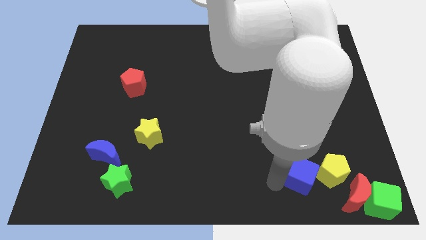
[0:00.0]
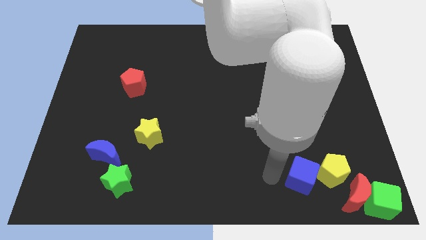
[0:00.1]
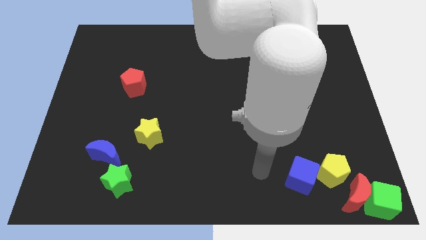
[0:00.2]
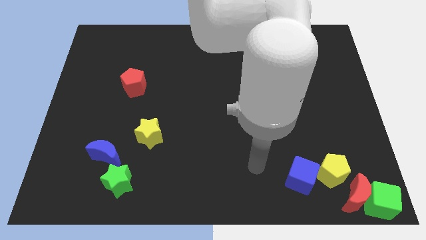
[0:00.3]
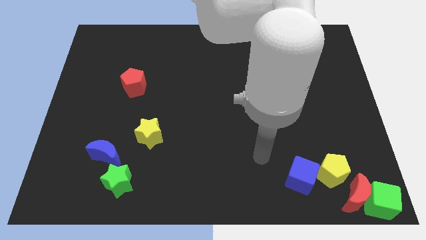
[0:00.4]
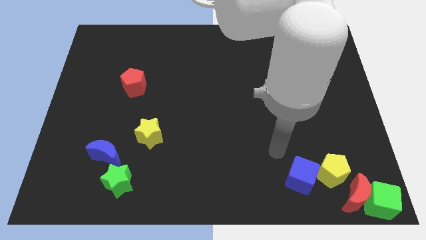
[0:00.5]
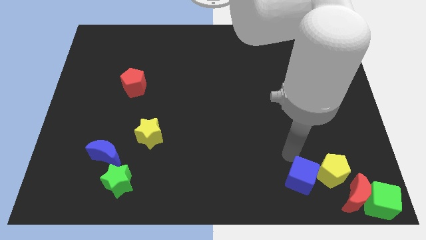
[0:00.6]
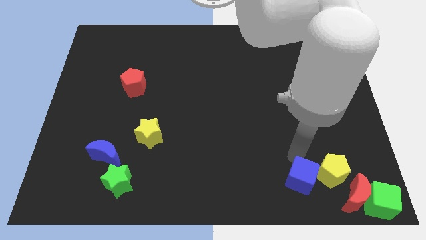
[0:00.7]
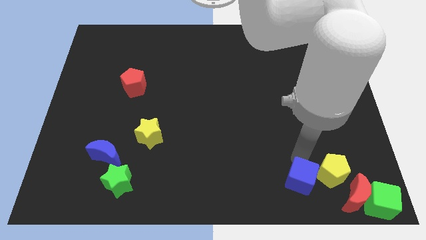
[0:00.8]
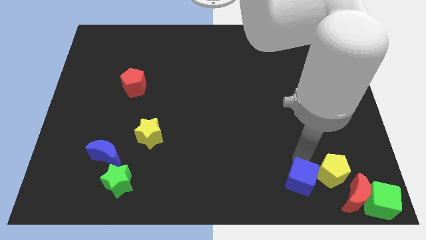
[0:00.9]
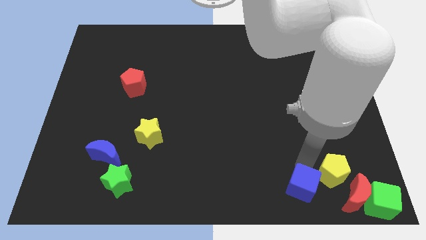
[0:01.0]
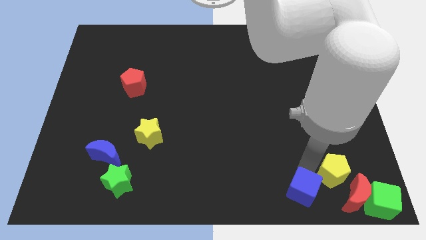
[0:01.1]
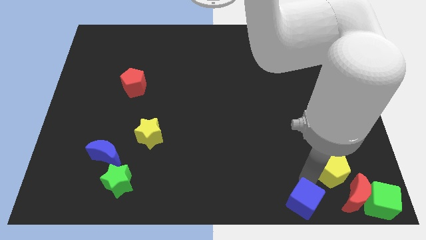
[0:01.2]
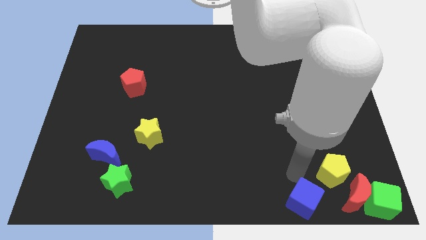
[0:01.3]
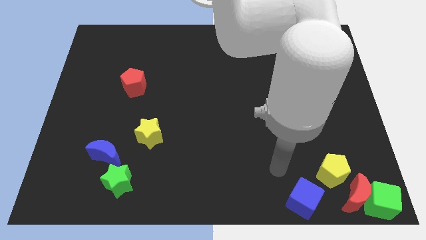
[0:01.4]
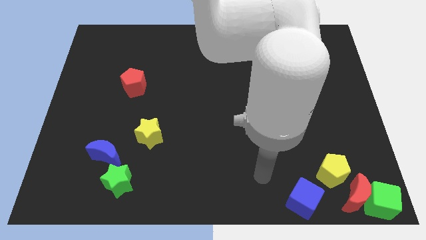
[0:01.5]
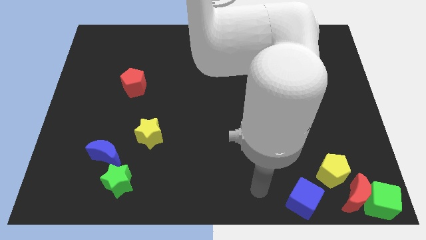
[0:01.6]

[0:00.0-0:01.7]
move the blue cube slightly away from the left side of the yellow pentagon

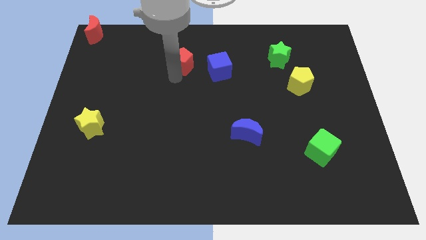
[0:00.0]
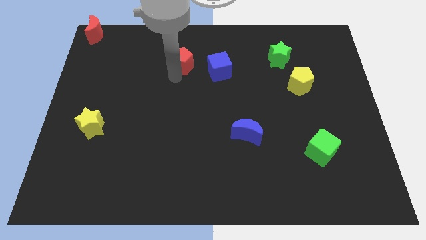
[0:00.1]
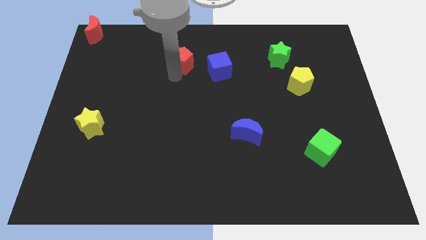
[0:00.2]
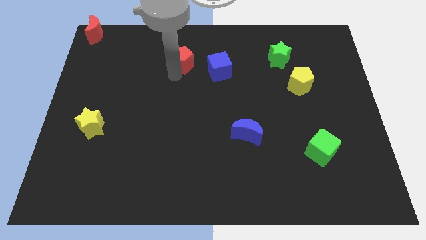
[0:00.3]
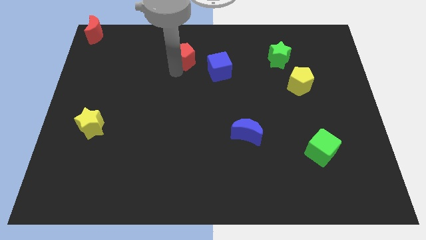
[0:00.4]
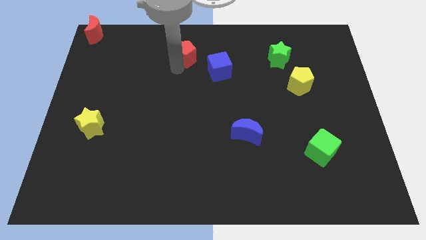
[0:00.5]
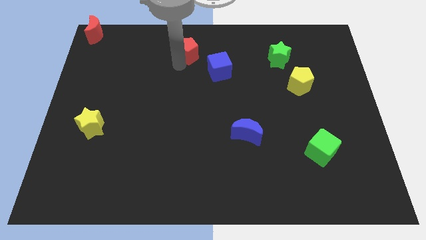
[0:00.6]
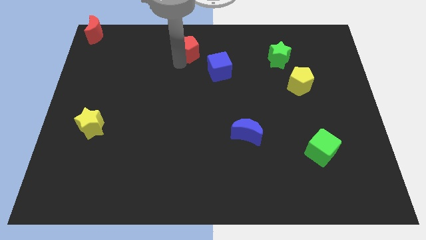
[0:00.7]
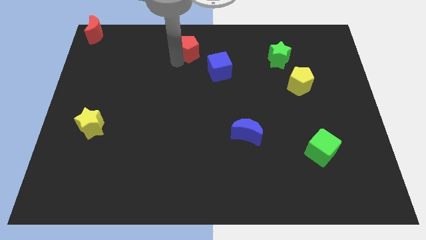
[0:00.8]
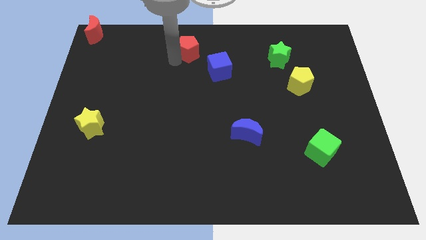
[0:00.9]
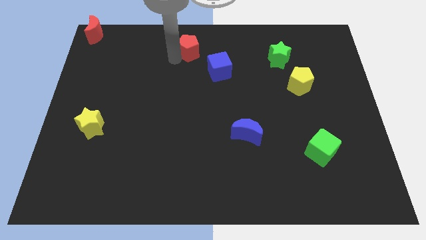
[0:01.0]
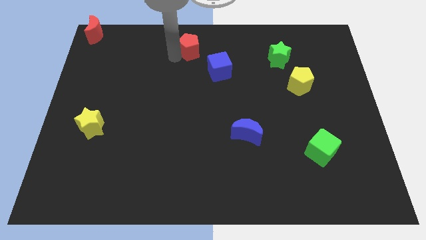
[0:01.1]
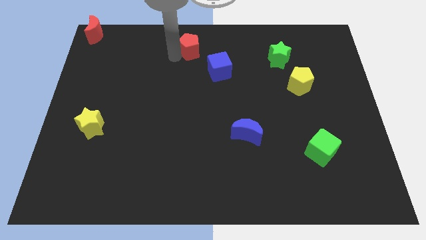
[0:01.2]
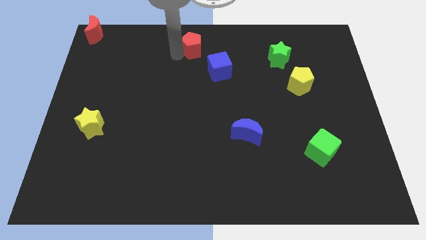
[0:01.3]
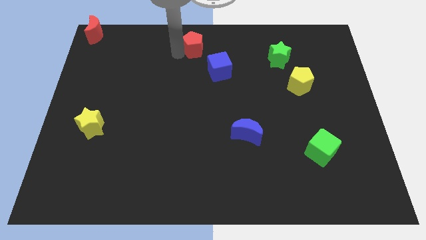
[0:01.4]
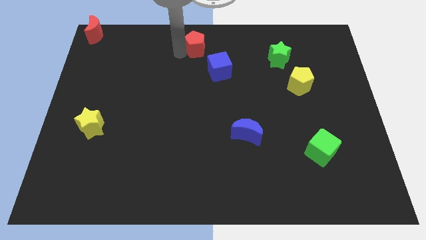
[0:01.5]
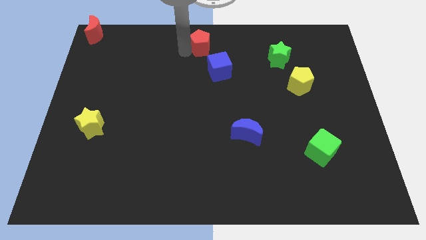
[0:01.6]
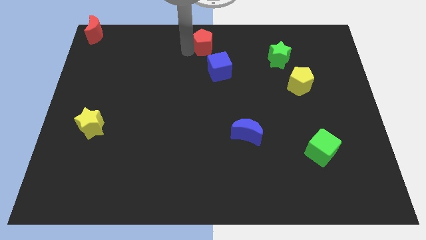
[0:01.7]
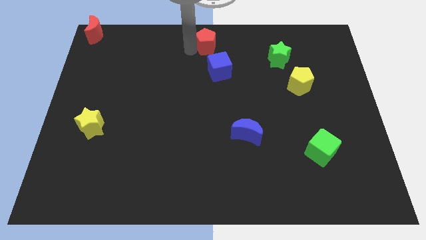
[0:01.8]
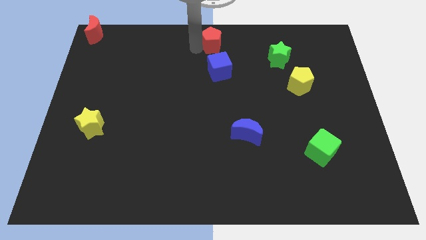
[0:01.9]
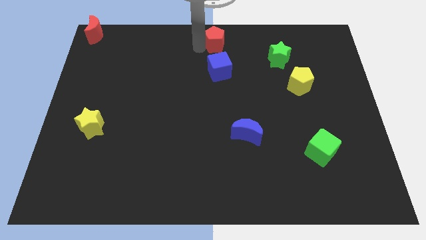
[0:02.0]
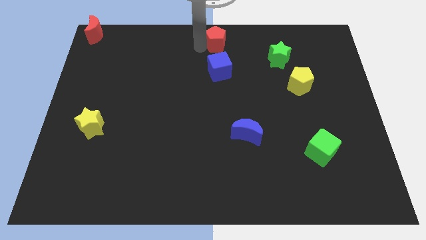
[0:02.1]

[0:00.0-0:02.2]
move red pentagon above the blue cube

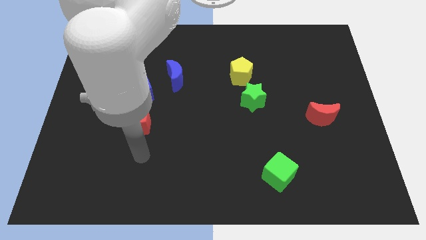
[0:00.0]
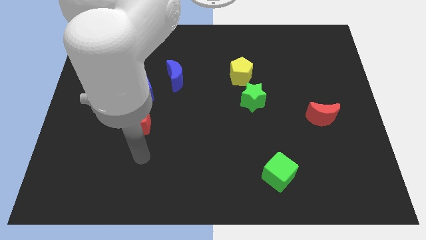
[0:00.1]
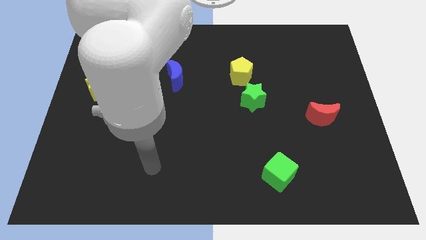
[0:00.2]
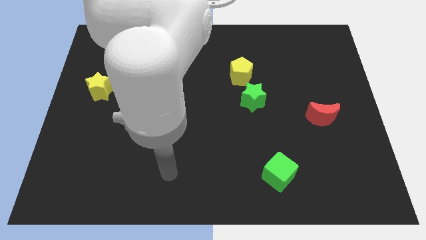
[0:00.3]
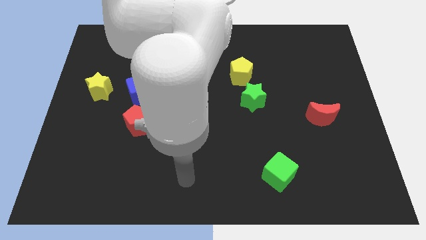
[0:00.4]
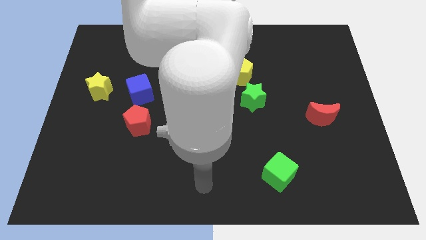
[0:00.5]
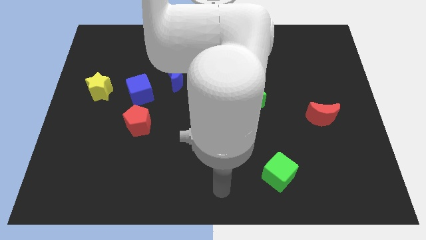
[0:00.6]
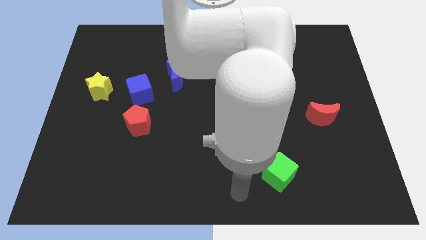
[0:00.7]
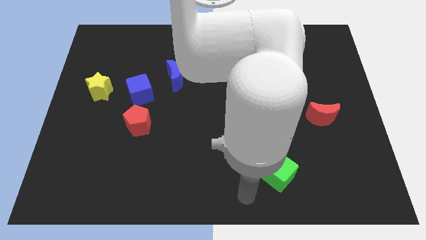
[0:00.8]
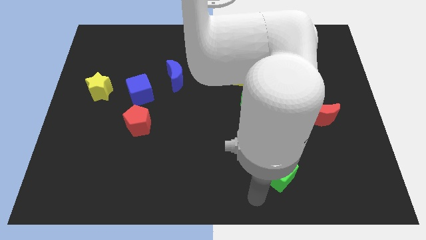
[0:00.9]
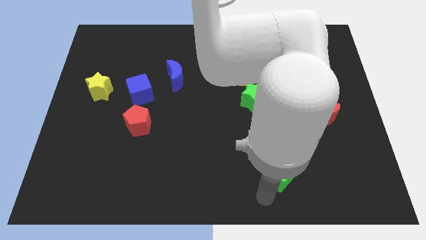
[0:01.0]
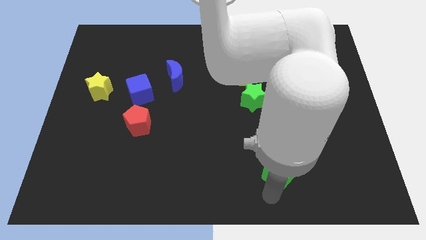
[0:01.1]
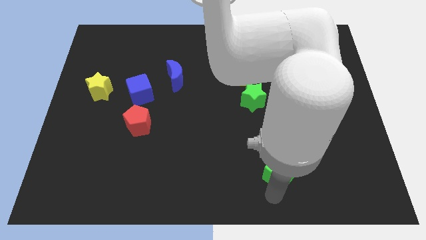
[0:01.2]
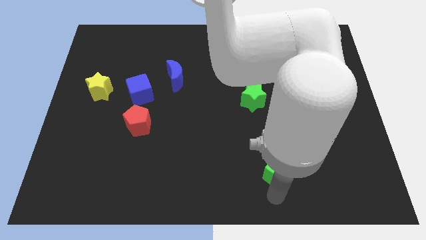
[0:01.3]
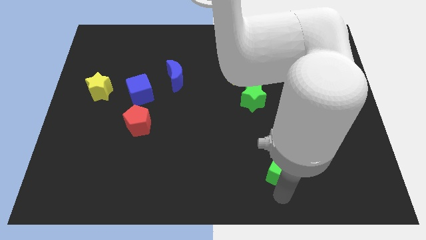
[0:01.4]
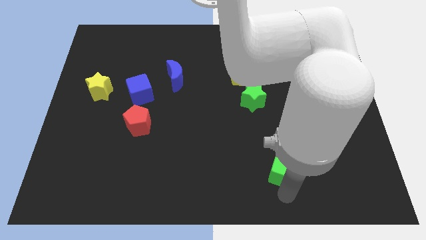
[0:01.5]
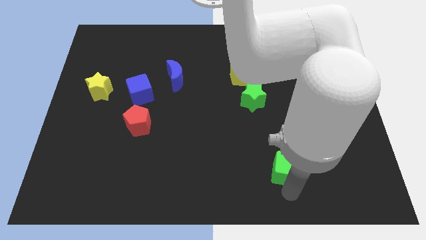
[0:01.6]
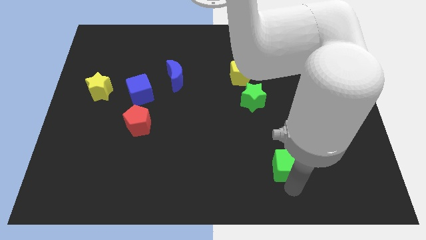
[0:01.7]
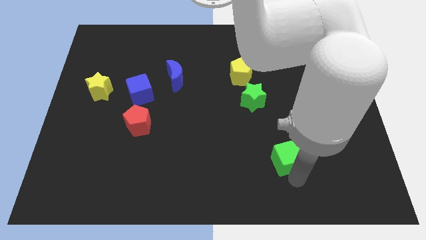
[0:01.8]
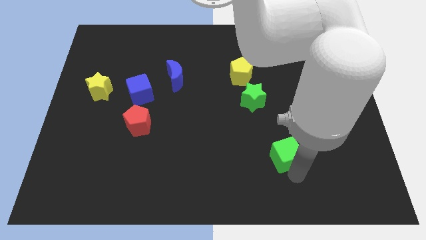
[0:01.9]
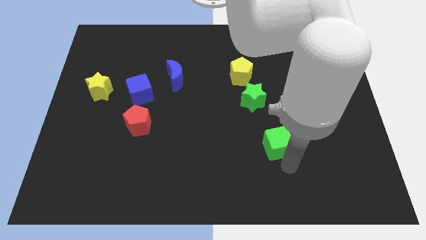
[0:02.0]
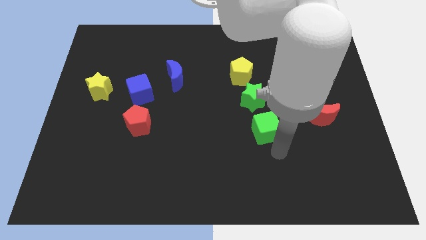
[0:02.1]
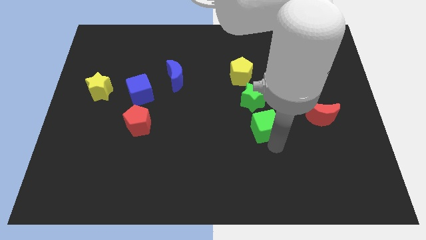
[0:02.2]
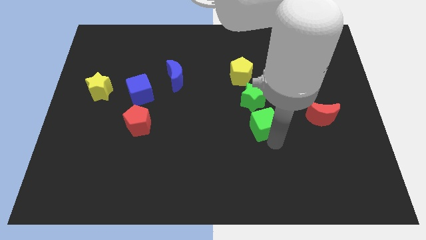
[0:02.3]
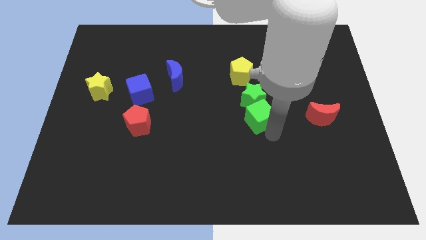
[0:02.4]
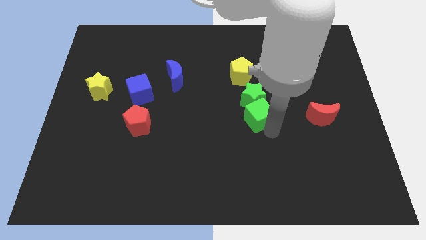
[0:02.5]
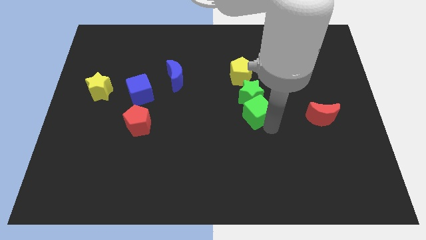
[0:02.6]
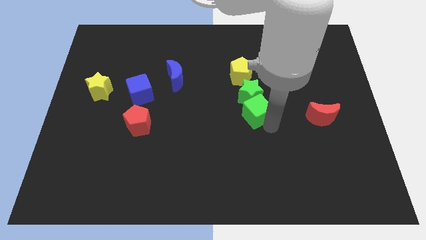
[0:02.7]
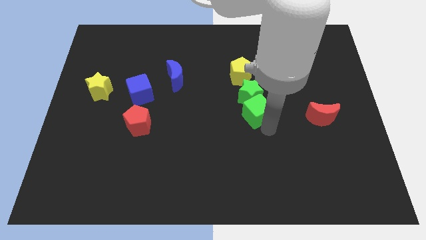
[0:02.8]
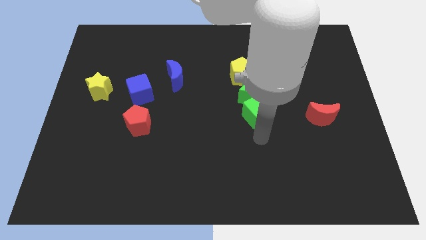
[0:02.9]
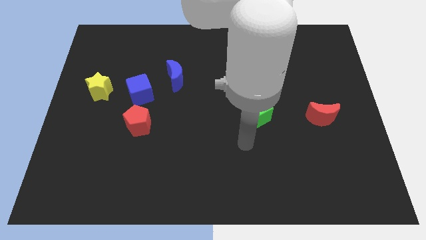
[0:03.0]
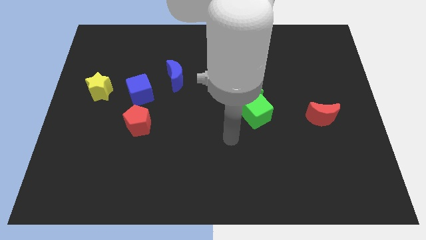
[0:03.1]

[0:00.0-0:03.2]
push the green cube close to the green star

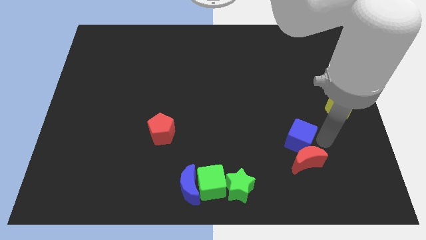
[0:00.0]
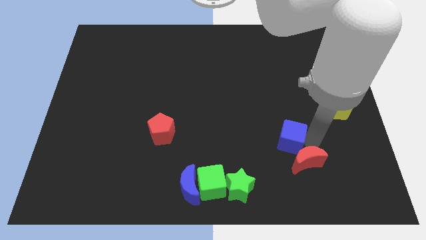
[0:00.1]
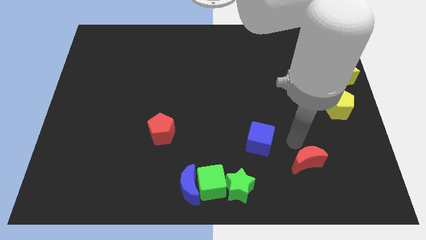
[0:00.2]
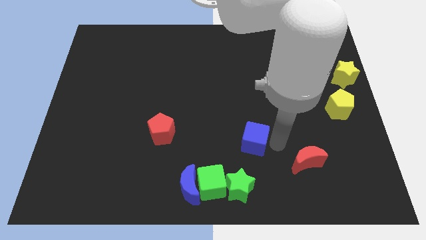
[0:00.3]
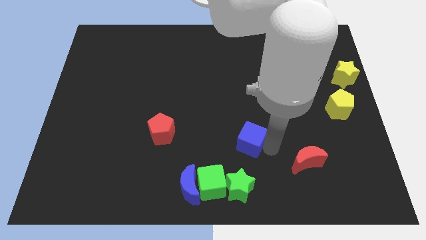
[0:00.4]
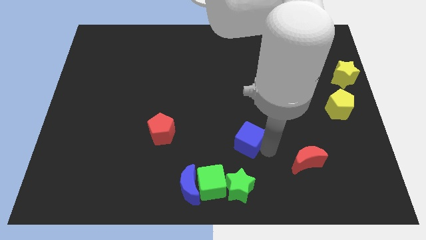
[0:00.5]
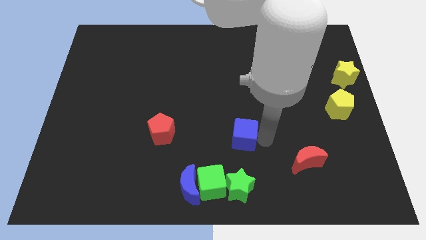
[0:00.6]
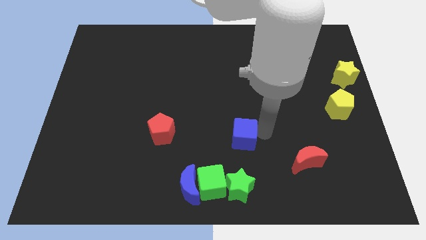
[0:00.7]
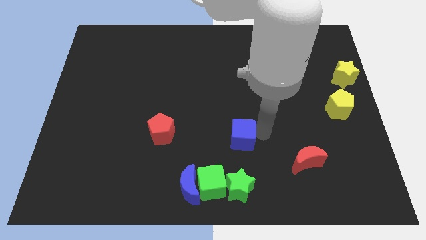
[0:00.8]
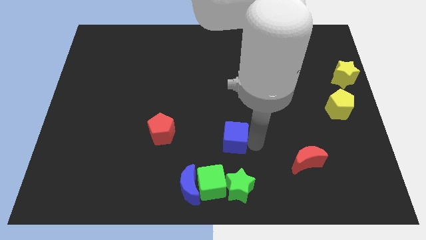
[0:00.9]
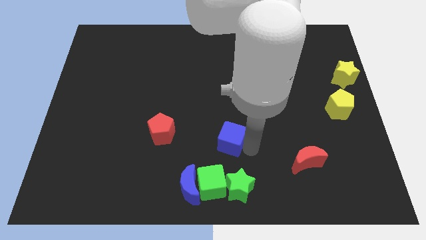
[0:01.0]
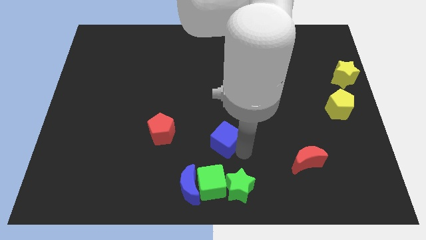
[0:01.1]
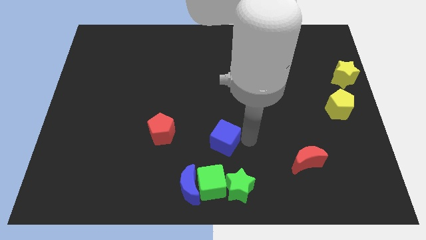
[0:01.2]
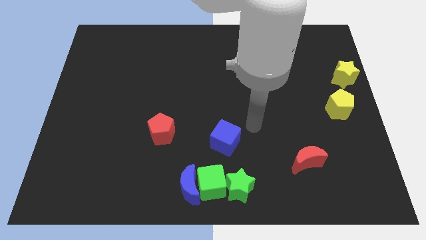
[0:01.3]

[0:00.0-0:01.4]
drag the blue cube to the left

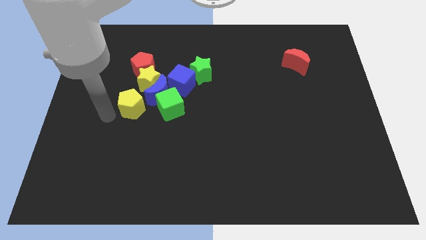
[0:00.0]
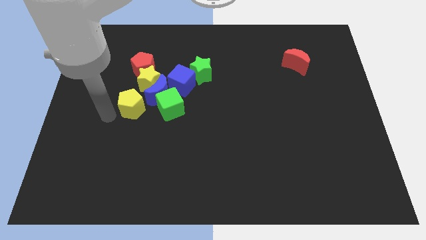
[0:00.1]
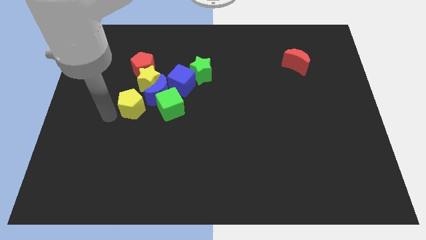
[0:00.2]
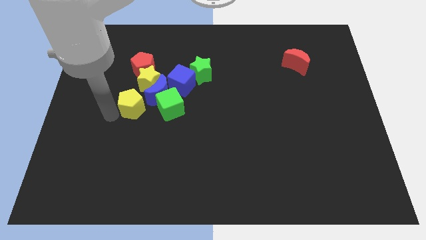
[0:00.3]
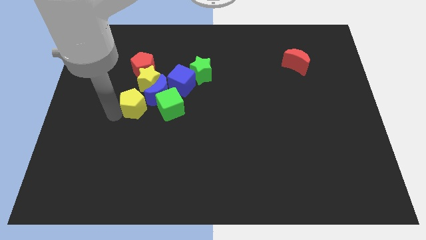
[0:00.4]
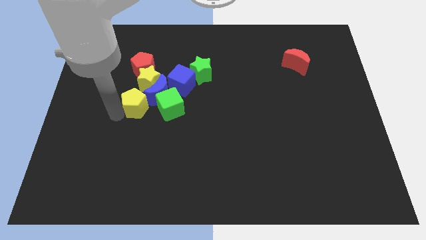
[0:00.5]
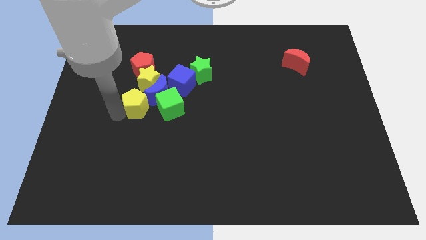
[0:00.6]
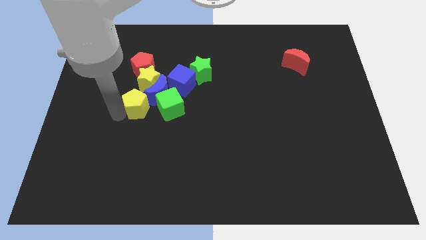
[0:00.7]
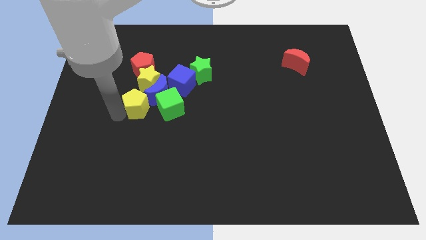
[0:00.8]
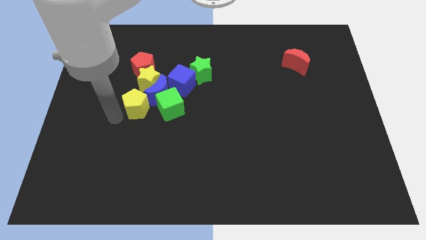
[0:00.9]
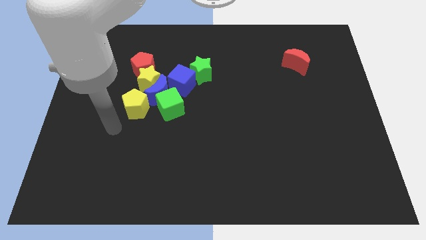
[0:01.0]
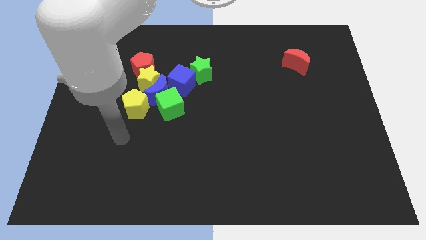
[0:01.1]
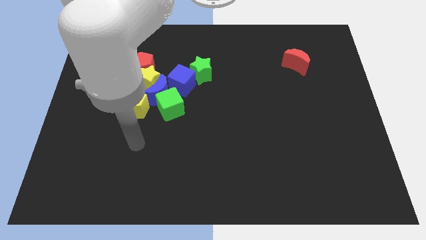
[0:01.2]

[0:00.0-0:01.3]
move the yellow pentagon into the group of blocks
